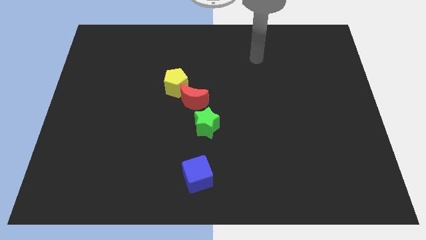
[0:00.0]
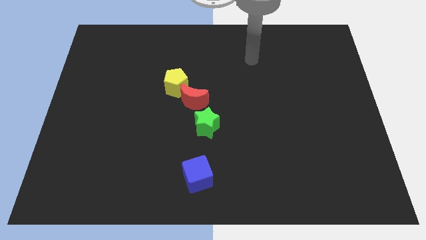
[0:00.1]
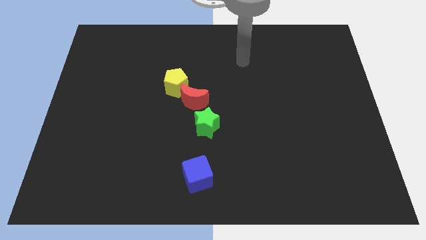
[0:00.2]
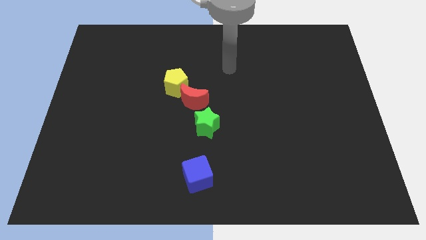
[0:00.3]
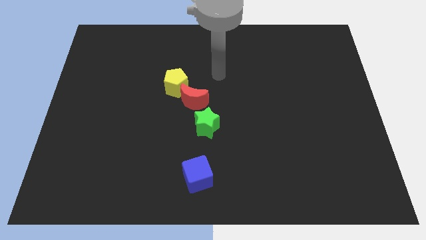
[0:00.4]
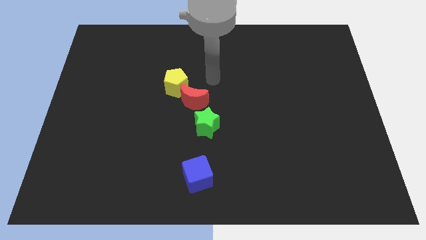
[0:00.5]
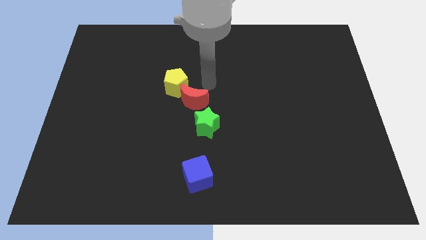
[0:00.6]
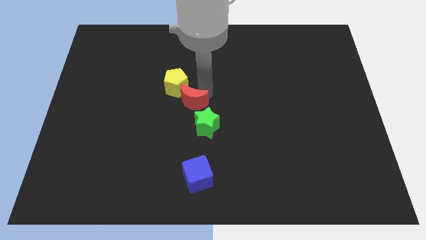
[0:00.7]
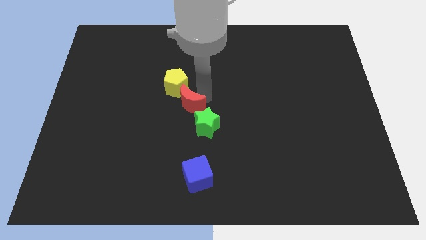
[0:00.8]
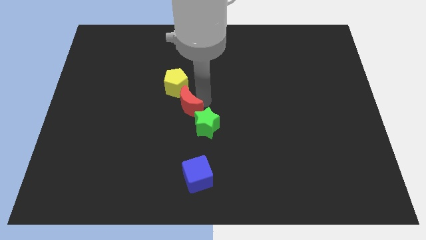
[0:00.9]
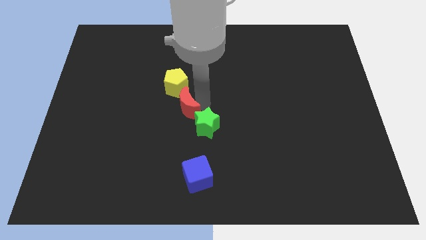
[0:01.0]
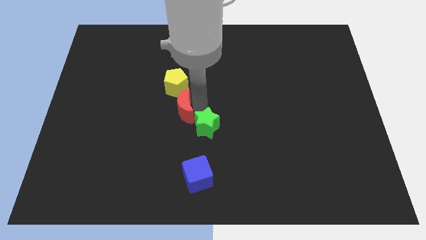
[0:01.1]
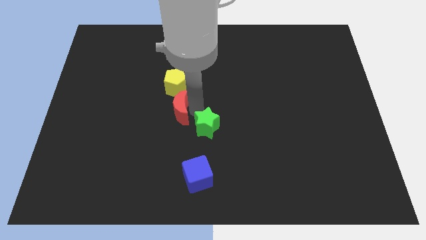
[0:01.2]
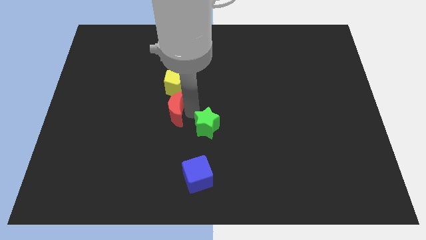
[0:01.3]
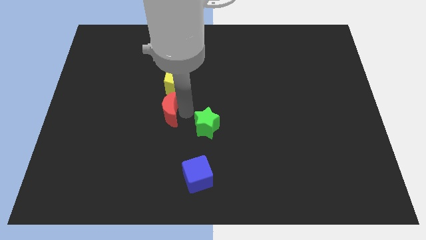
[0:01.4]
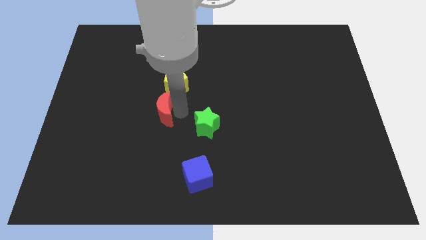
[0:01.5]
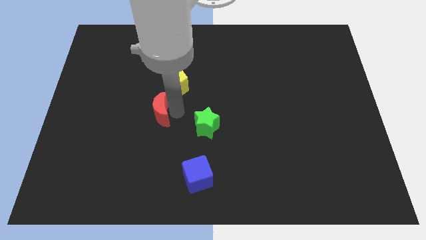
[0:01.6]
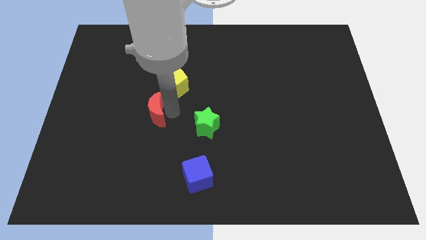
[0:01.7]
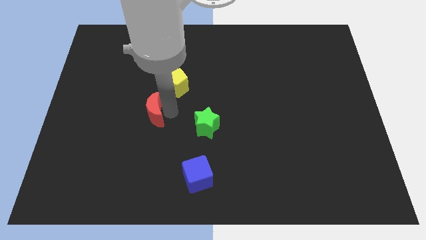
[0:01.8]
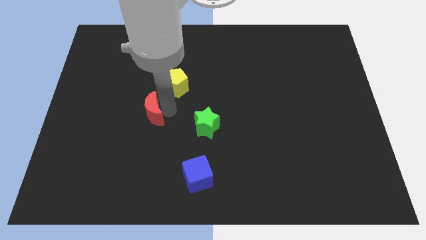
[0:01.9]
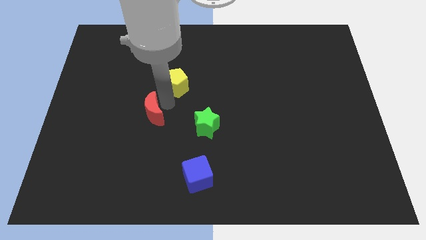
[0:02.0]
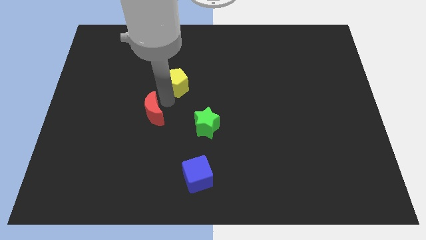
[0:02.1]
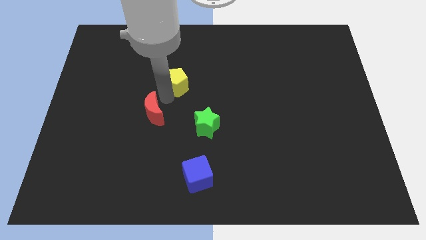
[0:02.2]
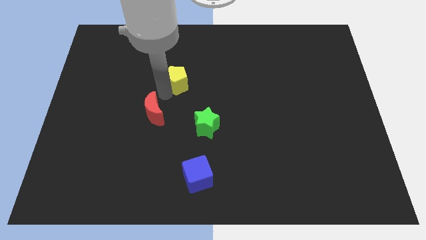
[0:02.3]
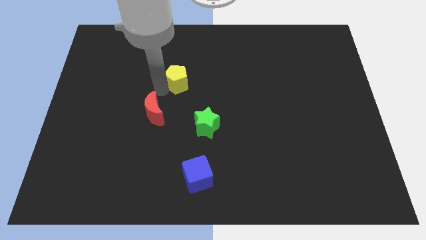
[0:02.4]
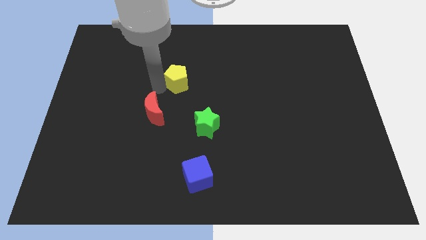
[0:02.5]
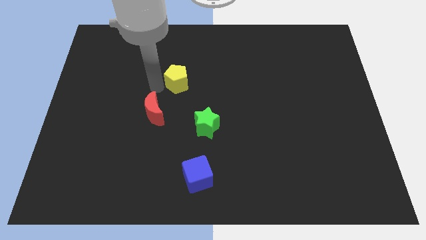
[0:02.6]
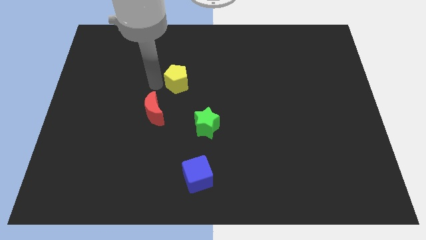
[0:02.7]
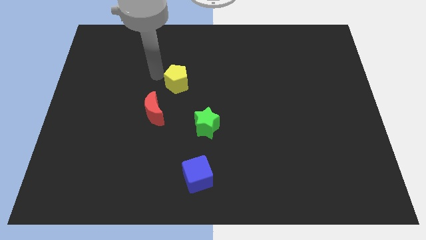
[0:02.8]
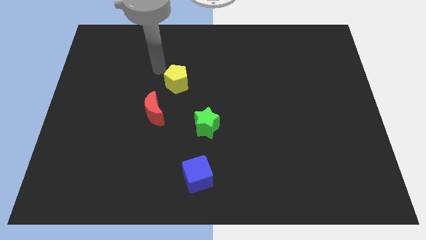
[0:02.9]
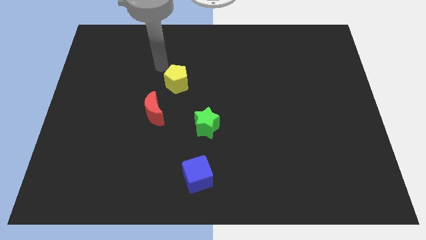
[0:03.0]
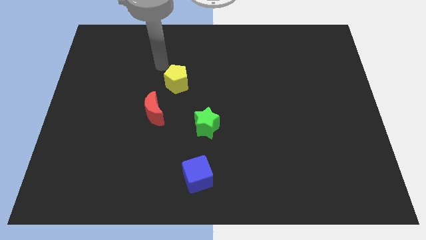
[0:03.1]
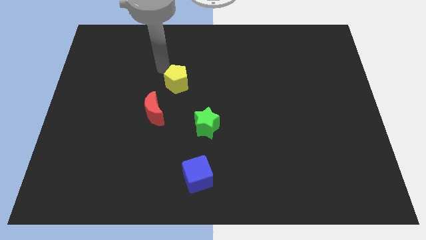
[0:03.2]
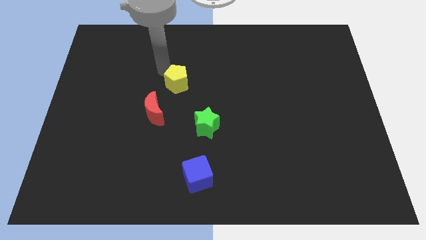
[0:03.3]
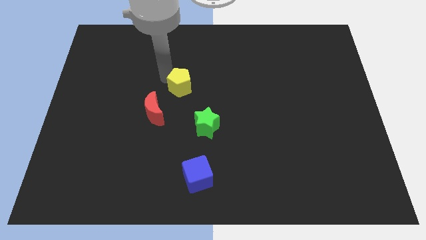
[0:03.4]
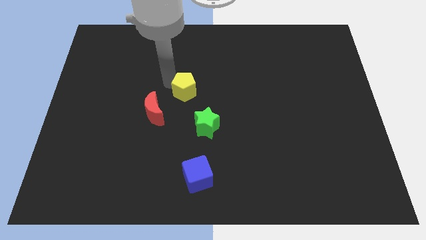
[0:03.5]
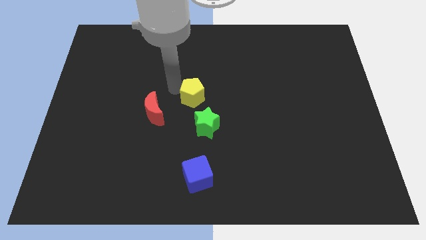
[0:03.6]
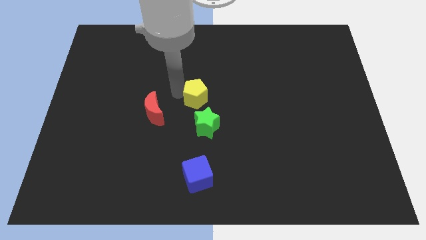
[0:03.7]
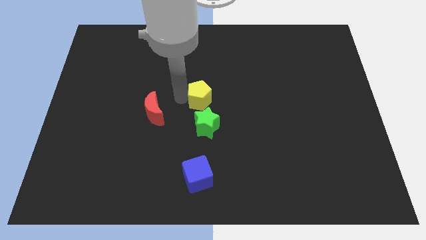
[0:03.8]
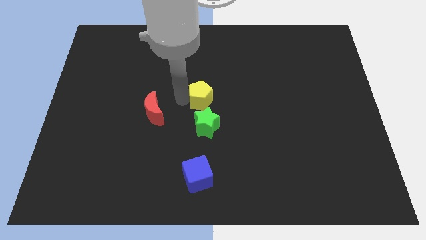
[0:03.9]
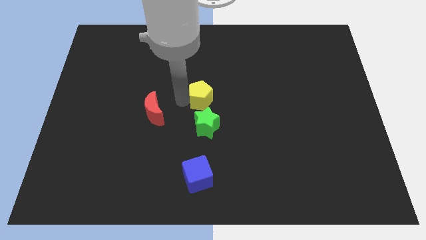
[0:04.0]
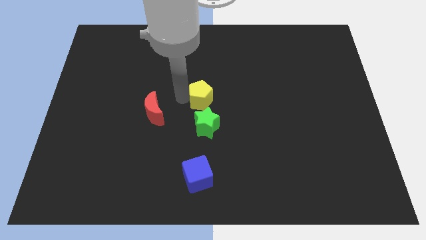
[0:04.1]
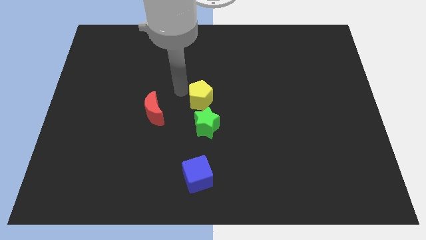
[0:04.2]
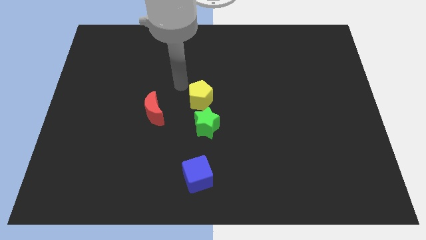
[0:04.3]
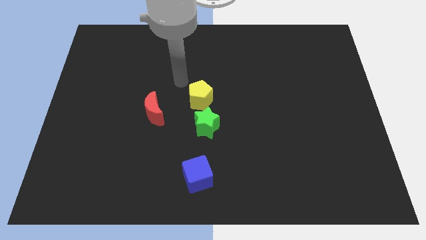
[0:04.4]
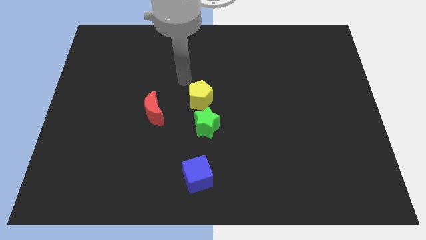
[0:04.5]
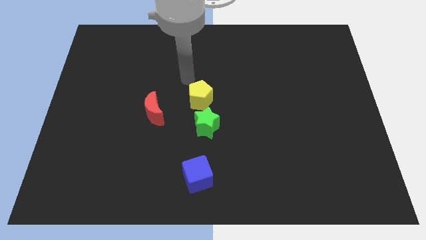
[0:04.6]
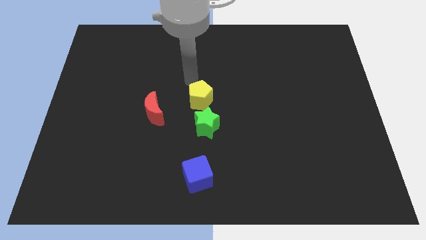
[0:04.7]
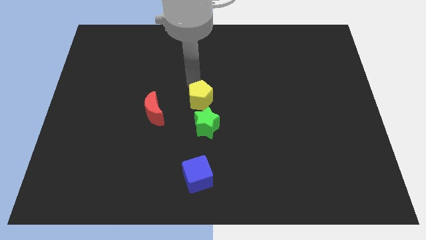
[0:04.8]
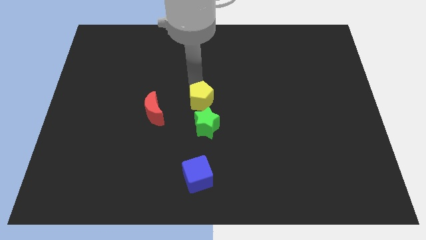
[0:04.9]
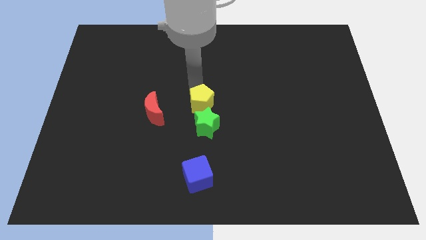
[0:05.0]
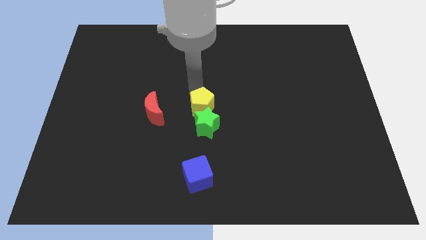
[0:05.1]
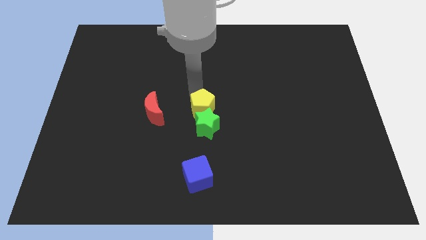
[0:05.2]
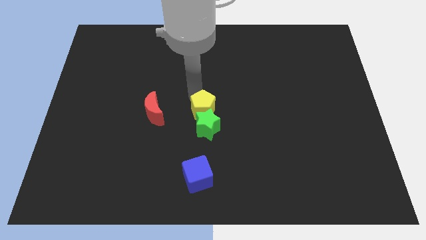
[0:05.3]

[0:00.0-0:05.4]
push the yellow block towards the green star

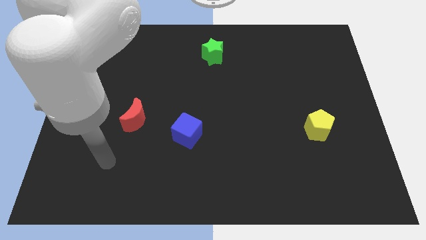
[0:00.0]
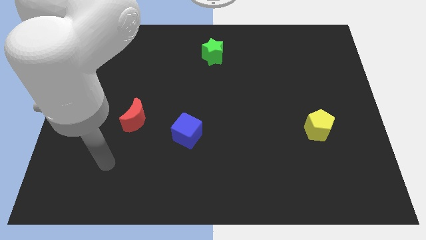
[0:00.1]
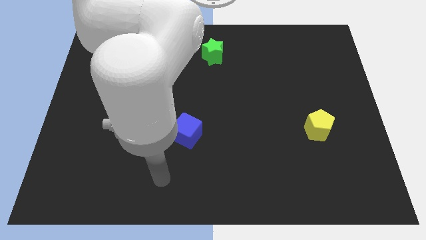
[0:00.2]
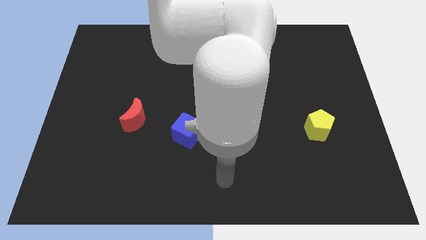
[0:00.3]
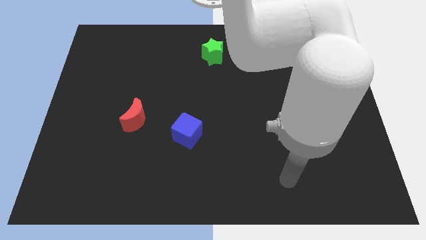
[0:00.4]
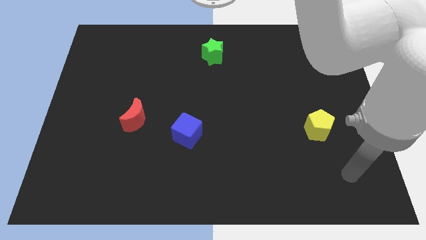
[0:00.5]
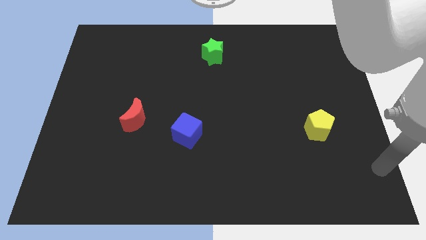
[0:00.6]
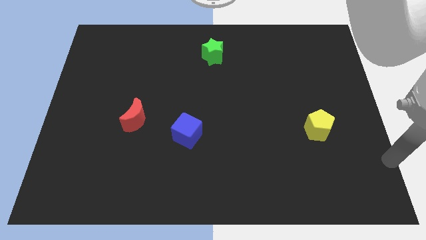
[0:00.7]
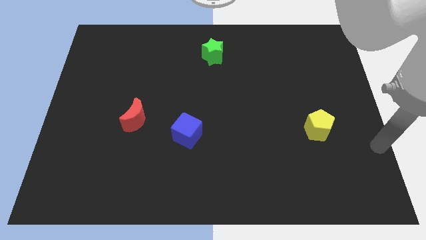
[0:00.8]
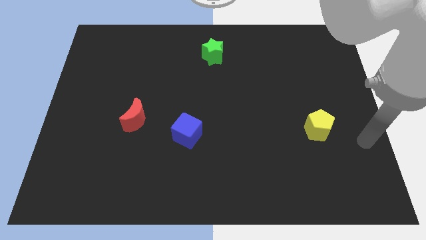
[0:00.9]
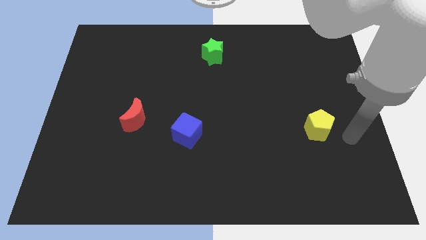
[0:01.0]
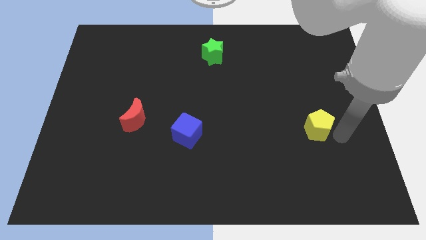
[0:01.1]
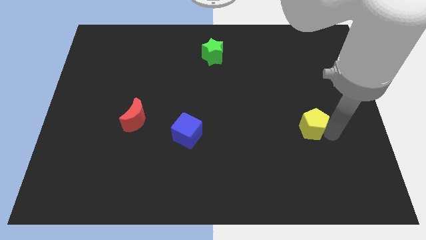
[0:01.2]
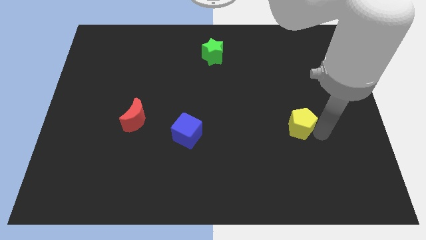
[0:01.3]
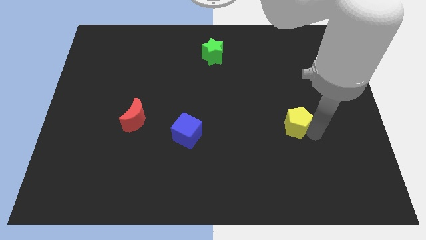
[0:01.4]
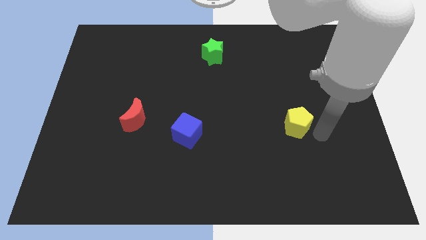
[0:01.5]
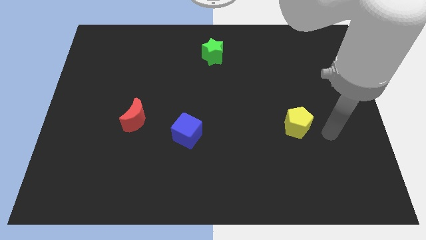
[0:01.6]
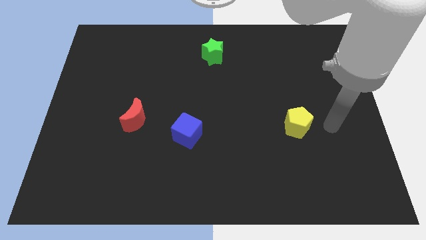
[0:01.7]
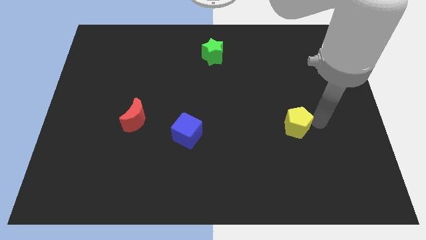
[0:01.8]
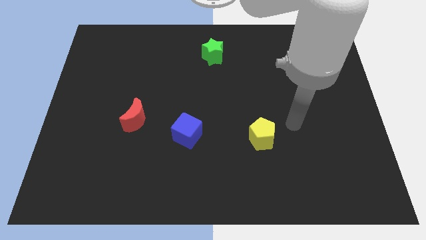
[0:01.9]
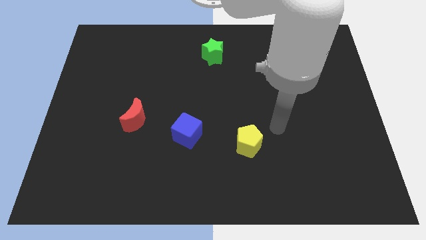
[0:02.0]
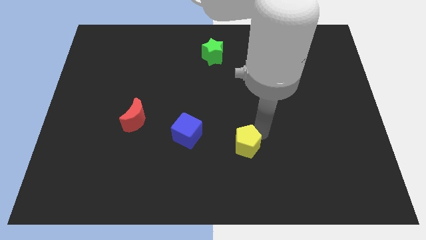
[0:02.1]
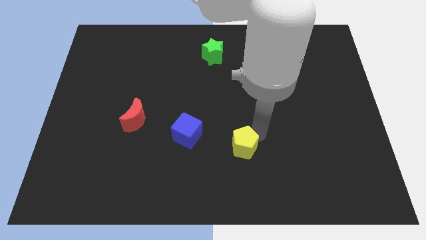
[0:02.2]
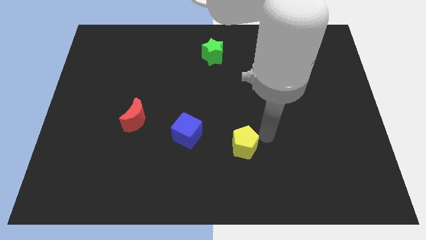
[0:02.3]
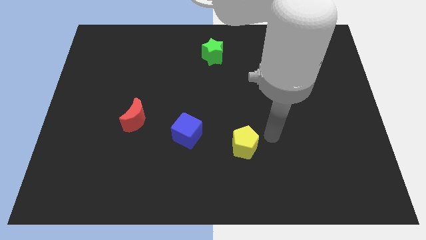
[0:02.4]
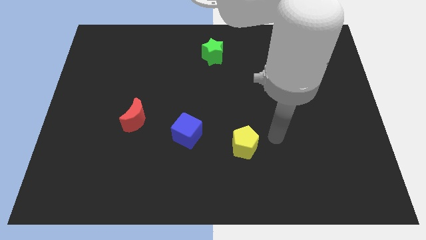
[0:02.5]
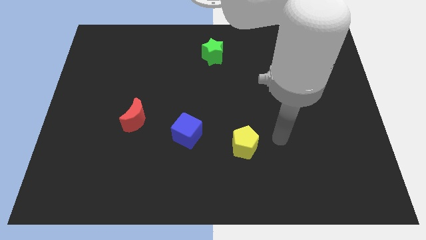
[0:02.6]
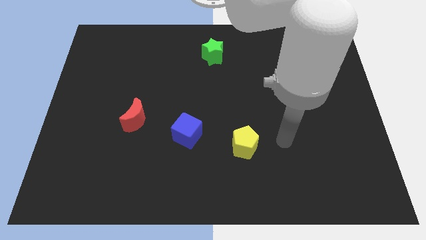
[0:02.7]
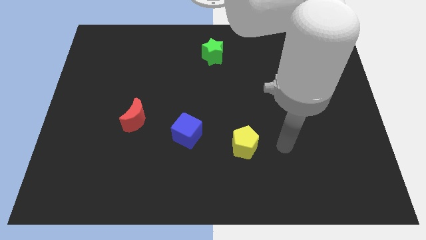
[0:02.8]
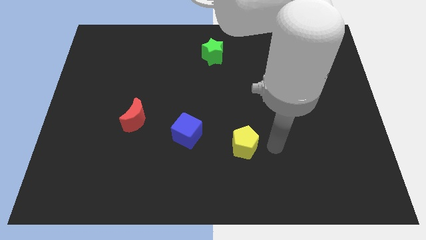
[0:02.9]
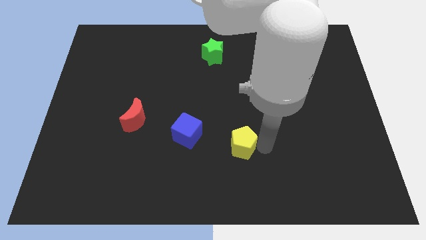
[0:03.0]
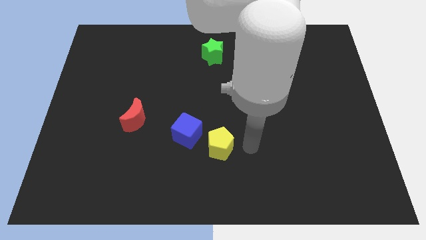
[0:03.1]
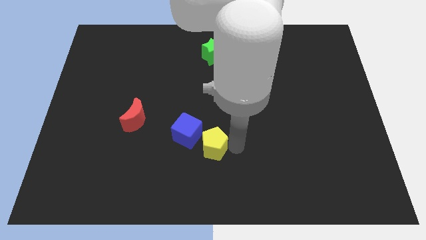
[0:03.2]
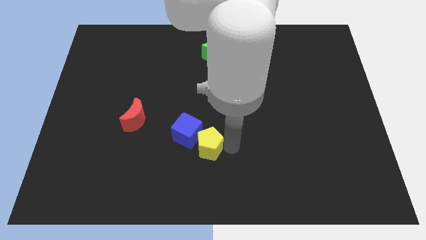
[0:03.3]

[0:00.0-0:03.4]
slide the yellow pentagon towards the blue block
